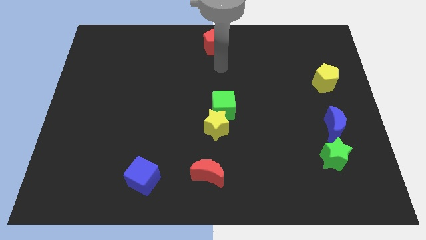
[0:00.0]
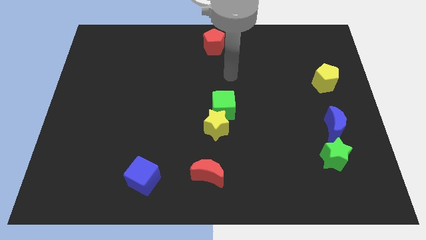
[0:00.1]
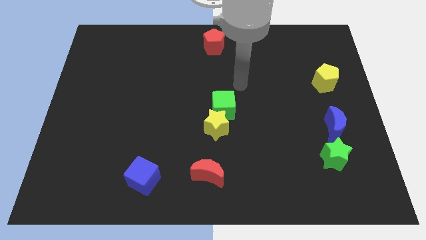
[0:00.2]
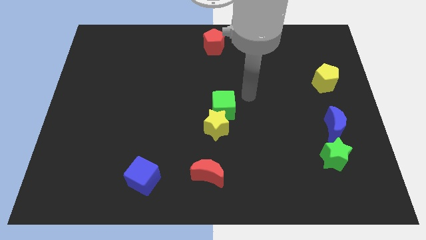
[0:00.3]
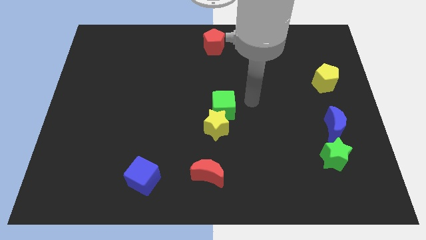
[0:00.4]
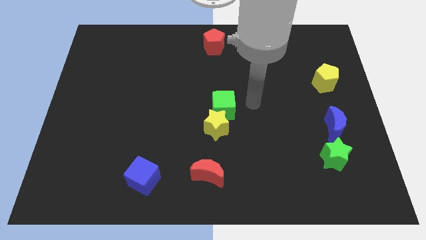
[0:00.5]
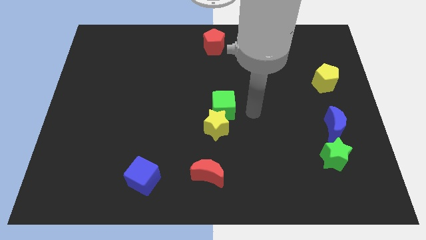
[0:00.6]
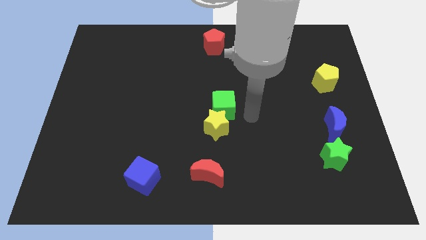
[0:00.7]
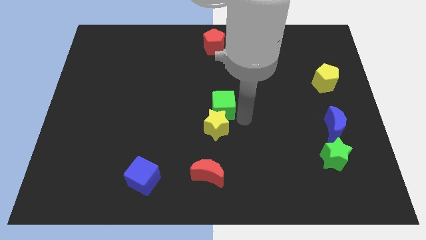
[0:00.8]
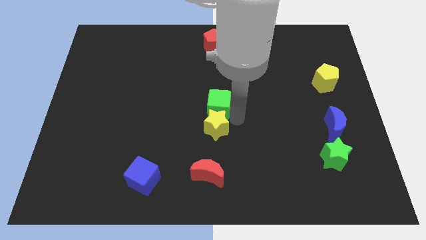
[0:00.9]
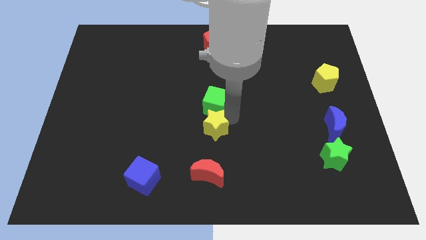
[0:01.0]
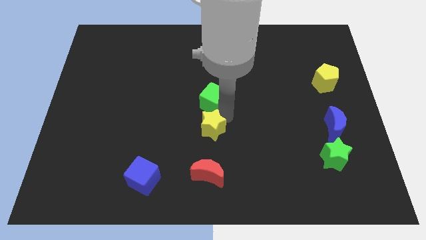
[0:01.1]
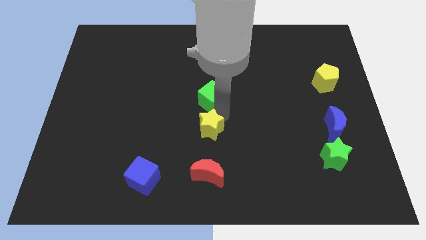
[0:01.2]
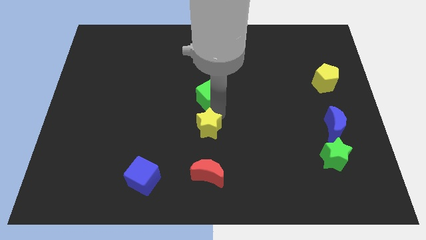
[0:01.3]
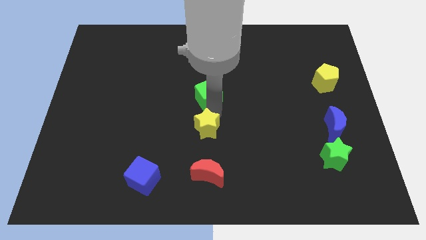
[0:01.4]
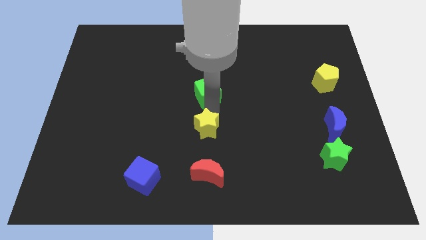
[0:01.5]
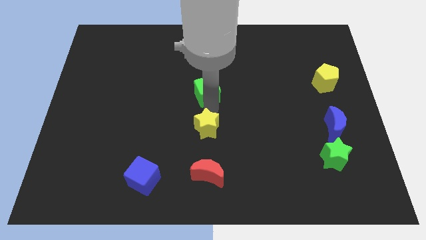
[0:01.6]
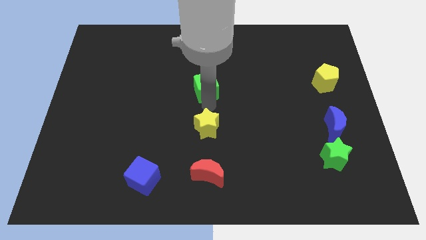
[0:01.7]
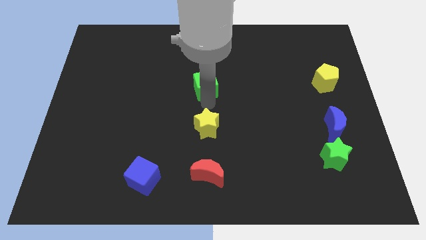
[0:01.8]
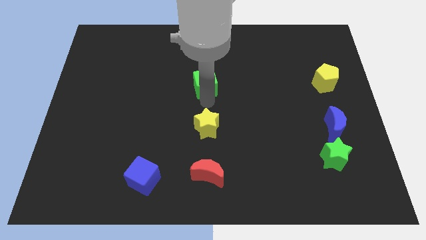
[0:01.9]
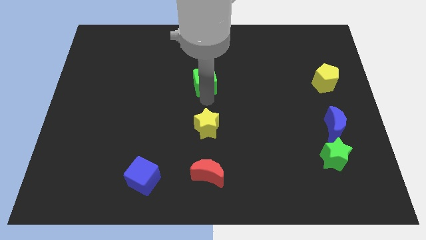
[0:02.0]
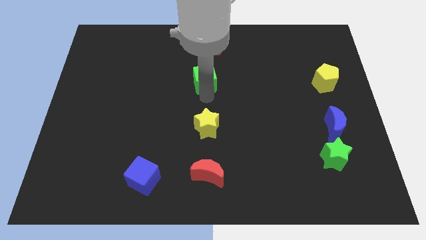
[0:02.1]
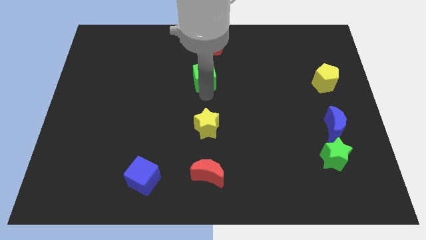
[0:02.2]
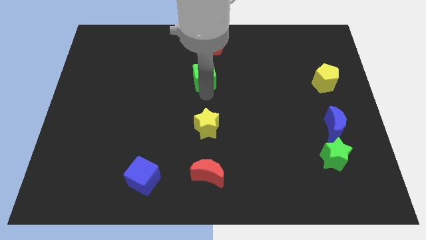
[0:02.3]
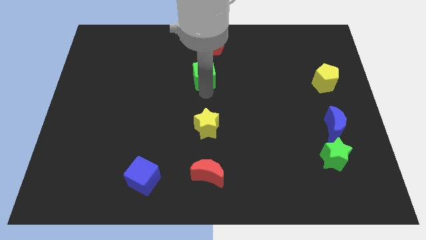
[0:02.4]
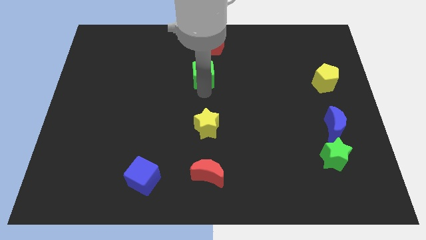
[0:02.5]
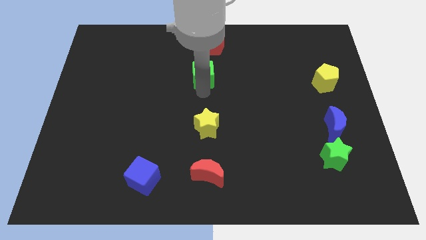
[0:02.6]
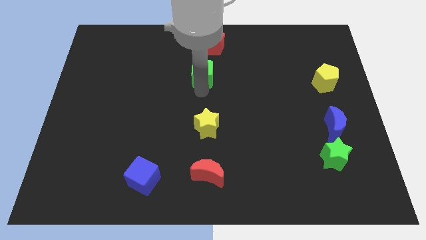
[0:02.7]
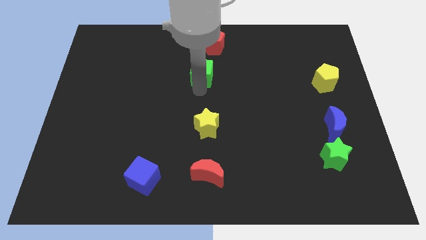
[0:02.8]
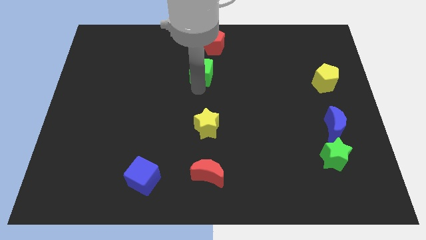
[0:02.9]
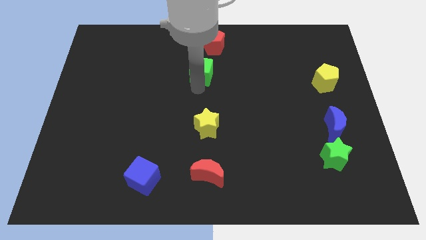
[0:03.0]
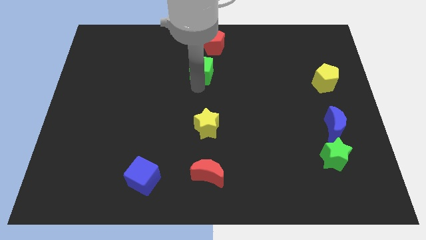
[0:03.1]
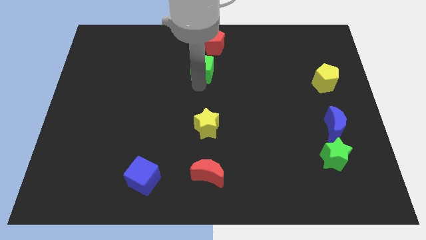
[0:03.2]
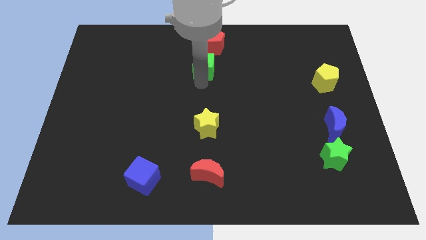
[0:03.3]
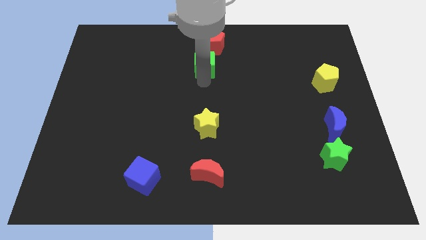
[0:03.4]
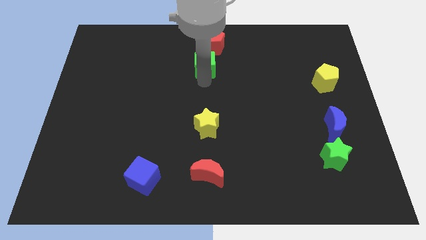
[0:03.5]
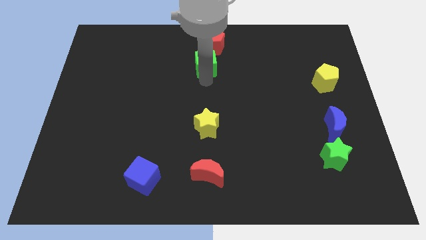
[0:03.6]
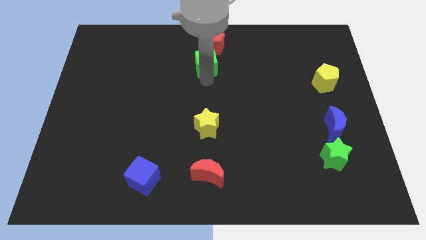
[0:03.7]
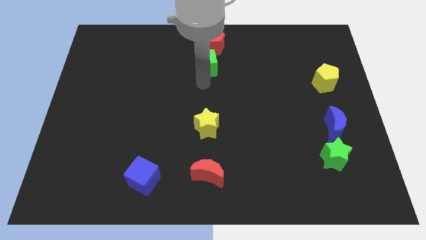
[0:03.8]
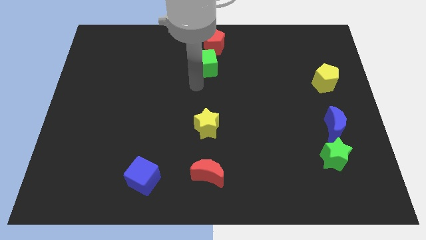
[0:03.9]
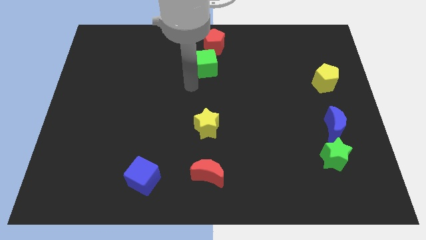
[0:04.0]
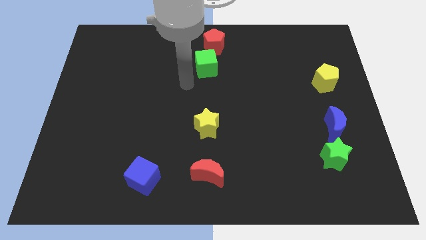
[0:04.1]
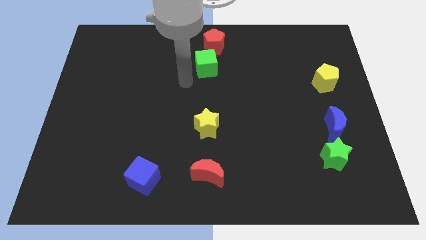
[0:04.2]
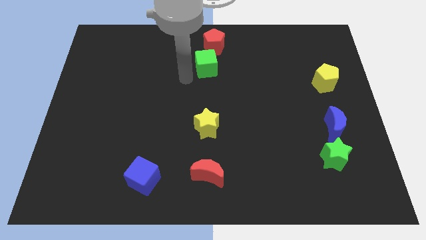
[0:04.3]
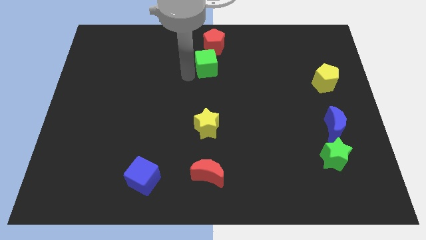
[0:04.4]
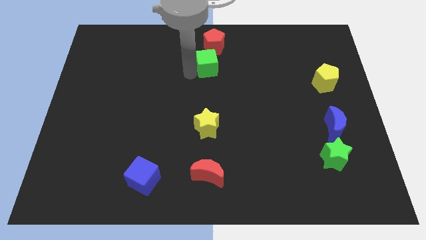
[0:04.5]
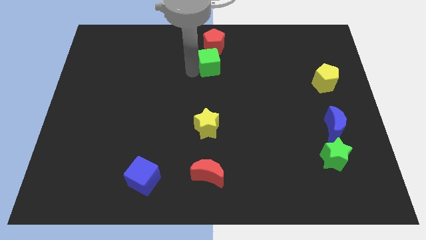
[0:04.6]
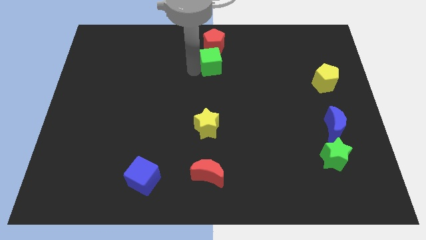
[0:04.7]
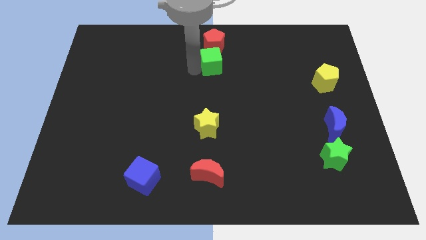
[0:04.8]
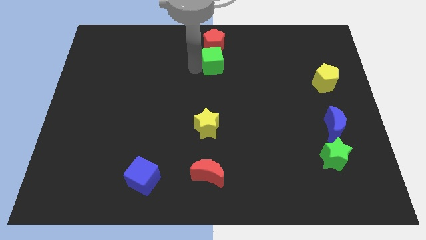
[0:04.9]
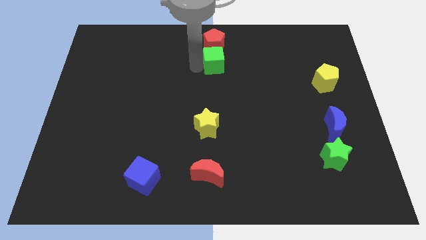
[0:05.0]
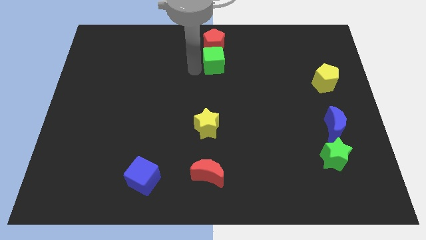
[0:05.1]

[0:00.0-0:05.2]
separate green cube and the yellow star

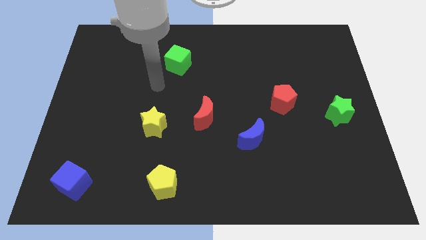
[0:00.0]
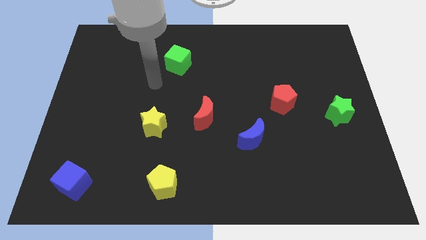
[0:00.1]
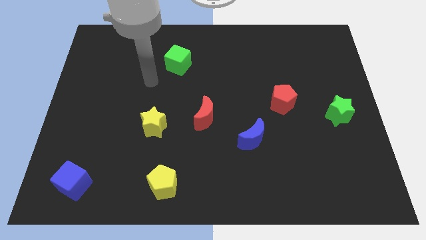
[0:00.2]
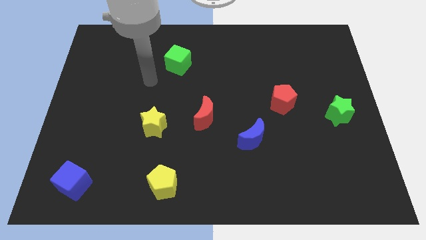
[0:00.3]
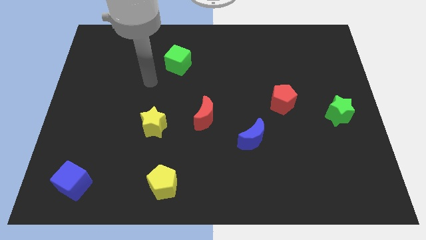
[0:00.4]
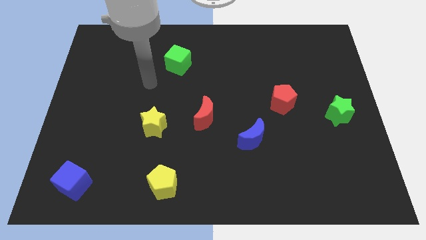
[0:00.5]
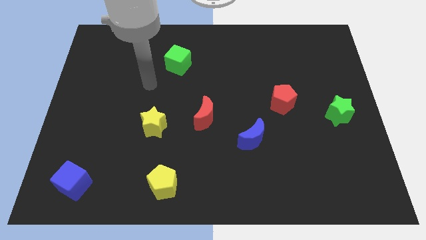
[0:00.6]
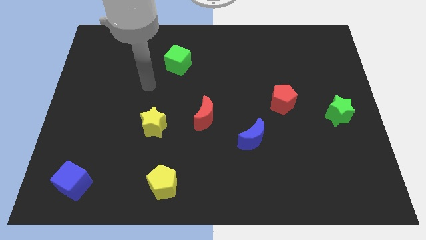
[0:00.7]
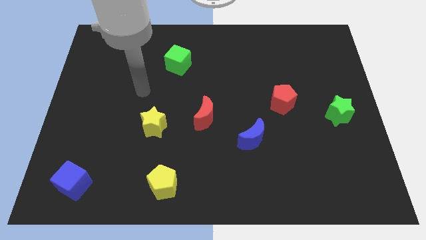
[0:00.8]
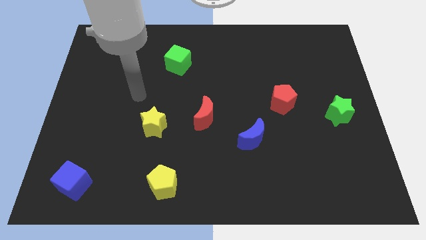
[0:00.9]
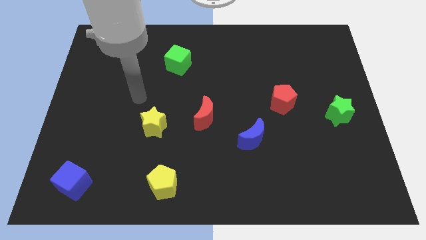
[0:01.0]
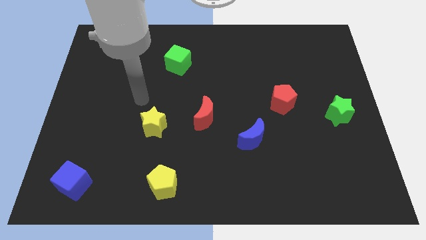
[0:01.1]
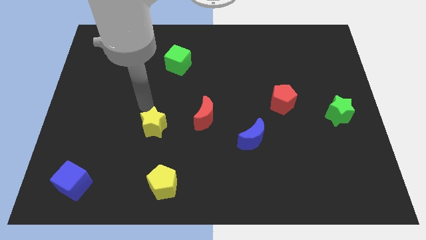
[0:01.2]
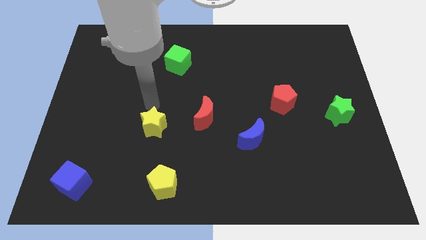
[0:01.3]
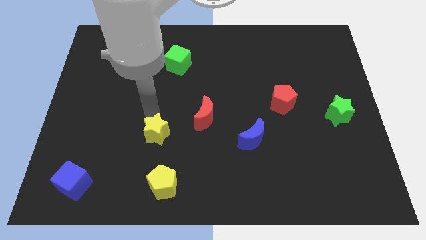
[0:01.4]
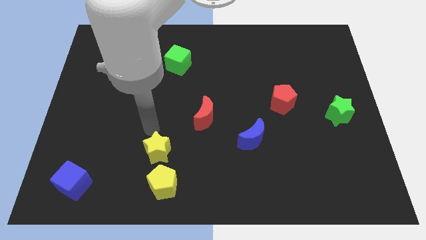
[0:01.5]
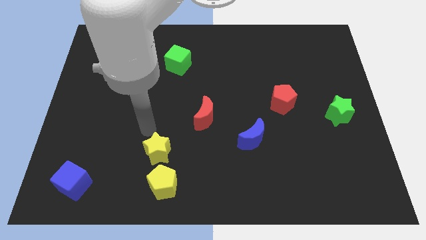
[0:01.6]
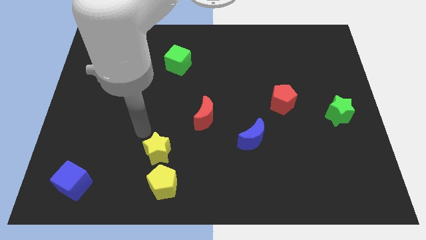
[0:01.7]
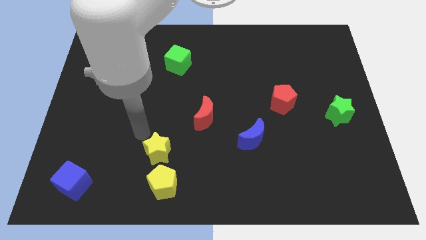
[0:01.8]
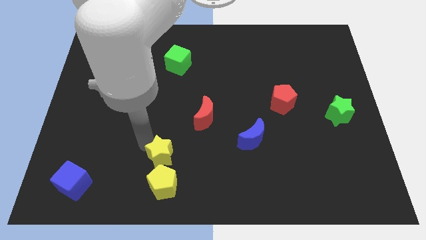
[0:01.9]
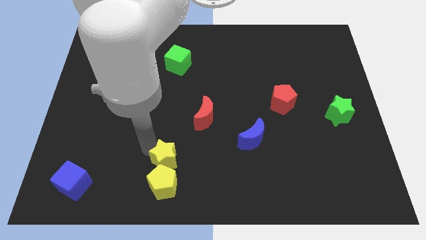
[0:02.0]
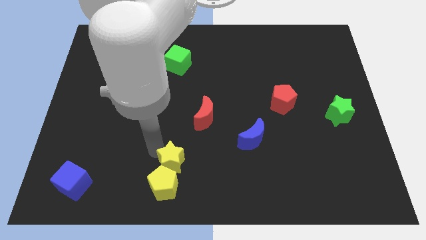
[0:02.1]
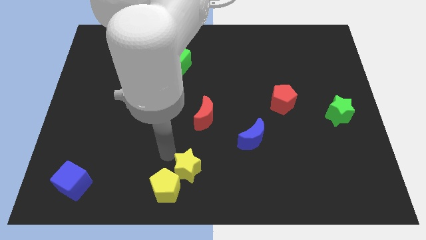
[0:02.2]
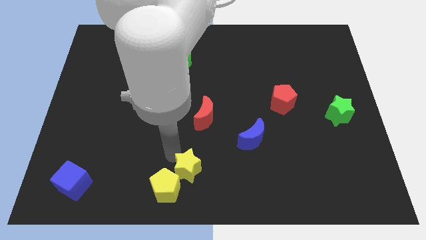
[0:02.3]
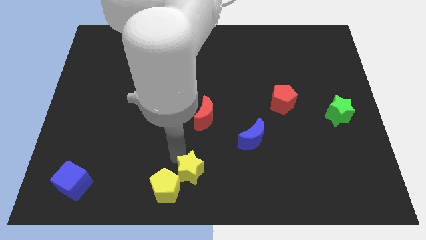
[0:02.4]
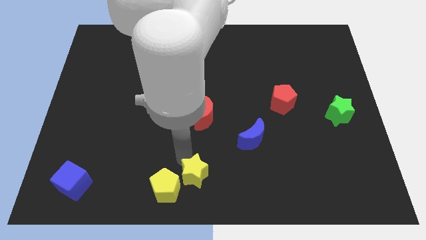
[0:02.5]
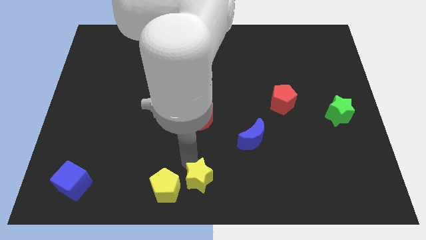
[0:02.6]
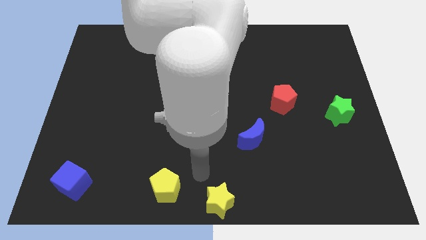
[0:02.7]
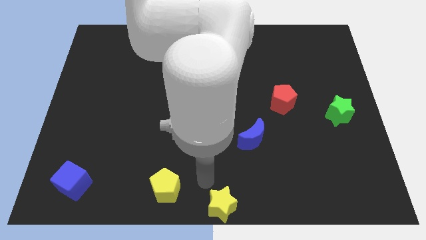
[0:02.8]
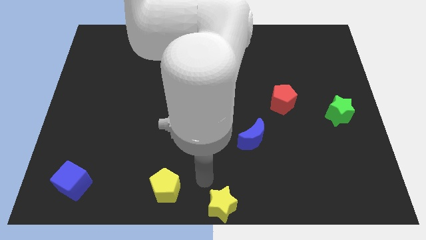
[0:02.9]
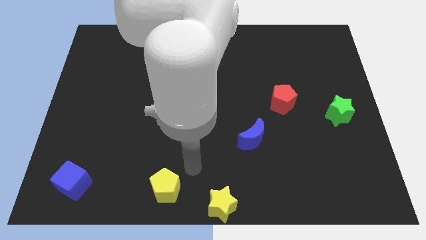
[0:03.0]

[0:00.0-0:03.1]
push the yellow star to the bottom center

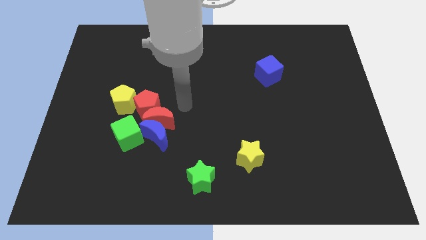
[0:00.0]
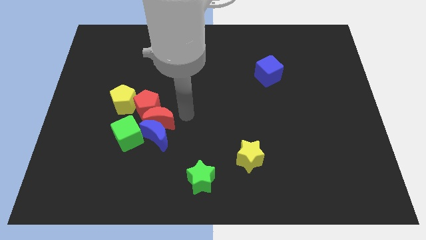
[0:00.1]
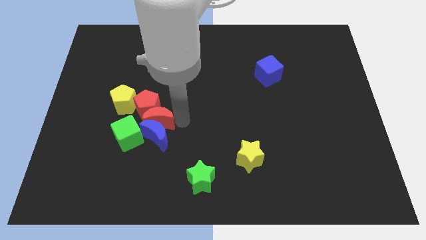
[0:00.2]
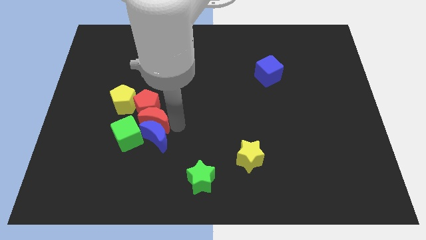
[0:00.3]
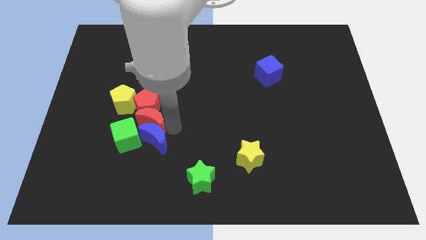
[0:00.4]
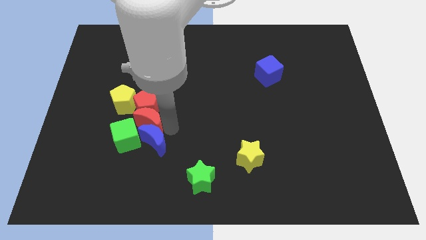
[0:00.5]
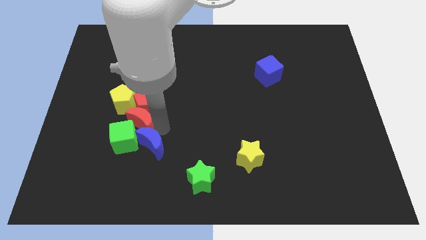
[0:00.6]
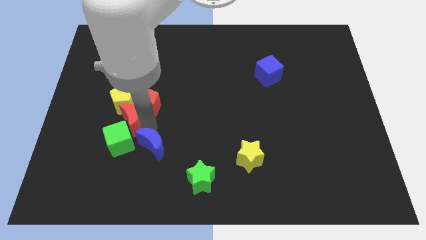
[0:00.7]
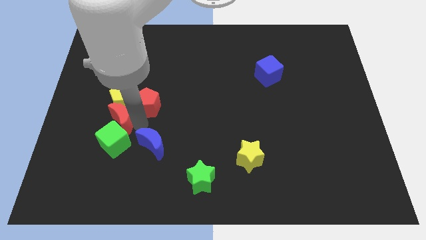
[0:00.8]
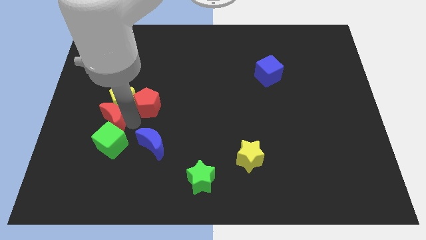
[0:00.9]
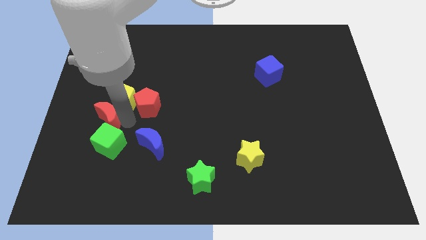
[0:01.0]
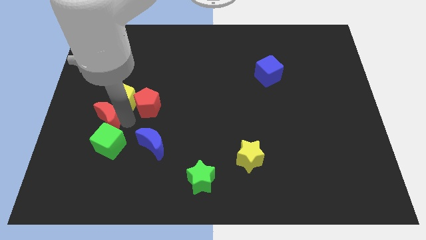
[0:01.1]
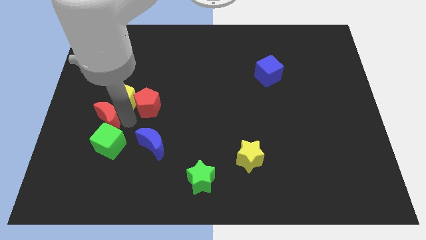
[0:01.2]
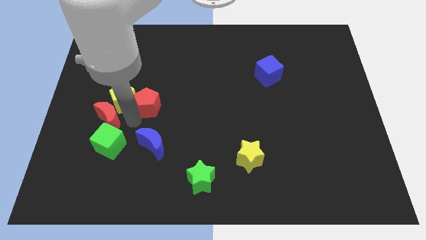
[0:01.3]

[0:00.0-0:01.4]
move the red crescent towards left a bit
